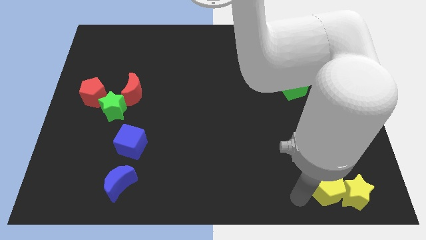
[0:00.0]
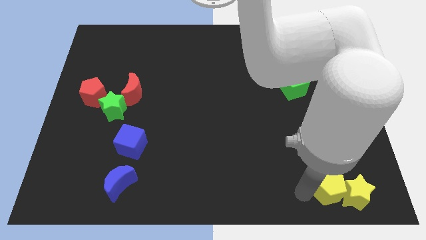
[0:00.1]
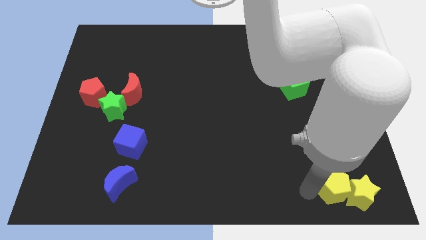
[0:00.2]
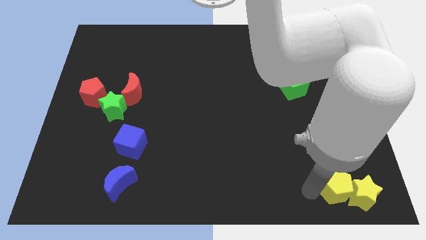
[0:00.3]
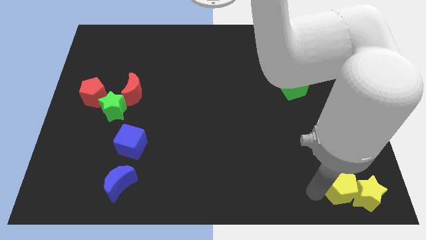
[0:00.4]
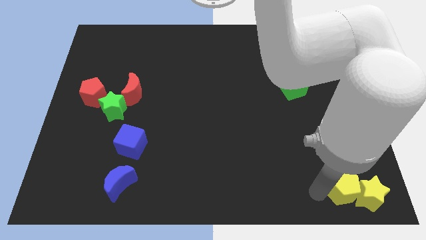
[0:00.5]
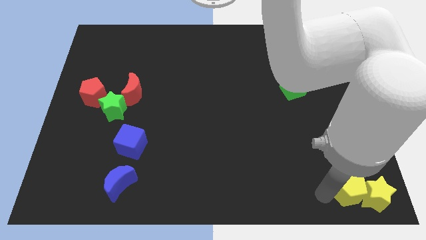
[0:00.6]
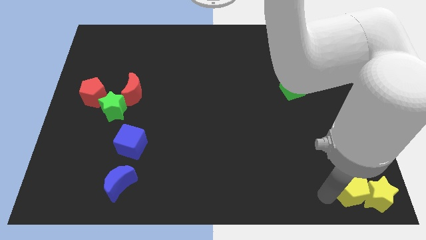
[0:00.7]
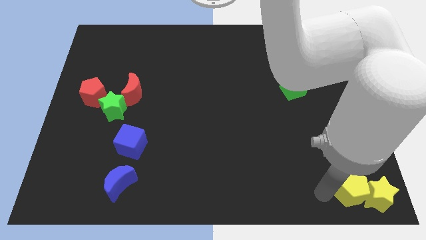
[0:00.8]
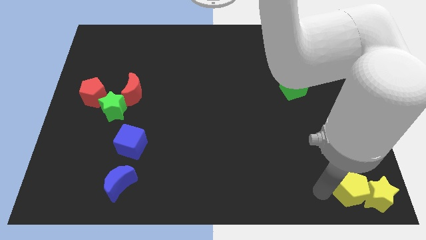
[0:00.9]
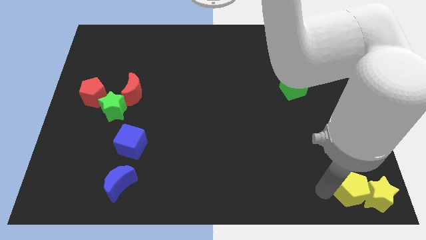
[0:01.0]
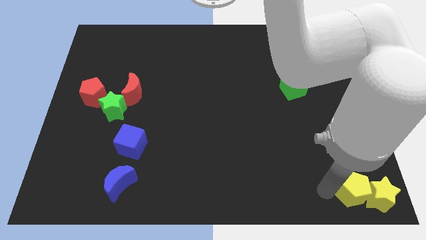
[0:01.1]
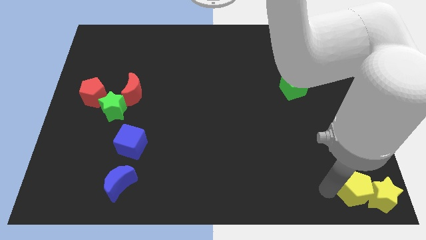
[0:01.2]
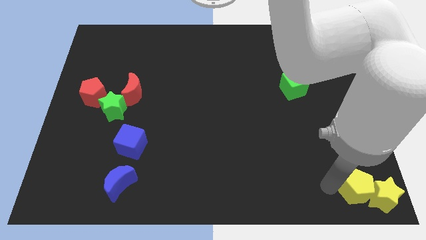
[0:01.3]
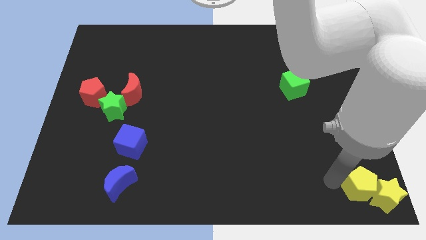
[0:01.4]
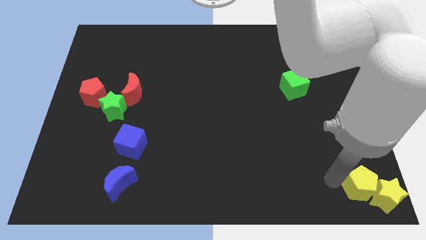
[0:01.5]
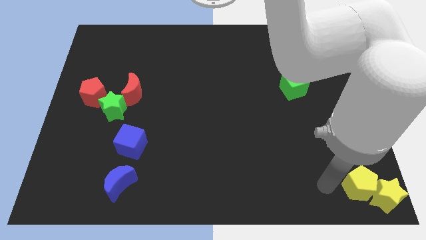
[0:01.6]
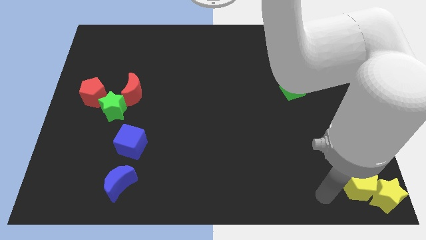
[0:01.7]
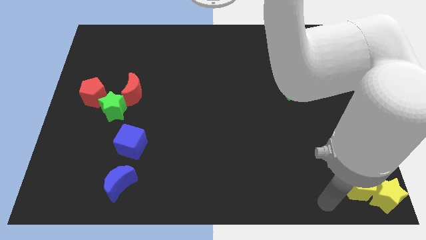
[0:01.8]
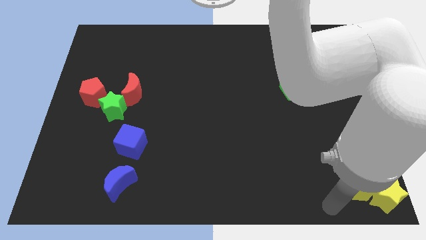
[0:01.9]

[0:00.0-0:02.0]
place the yellow star and yellow pentagon at the bottom right

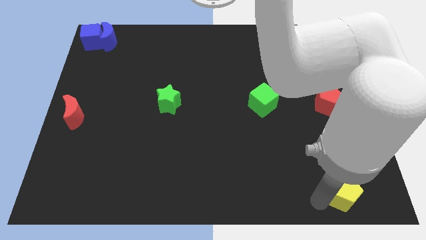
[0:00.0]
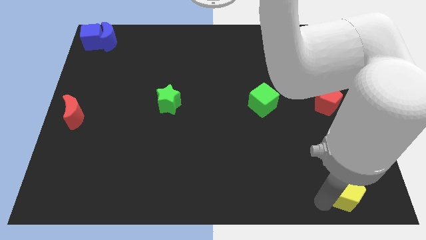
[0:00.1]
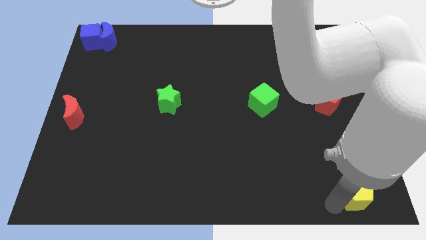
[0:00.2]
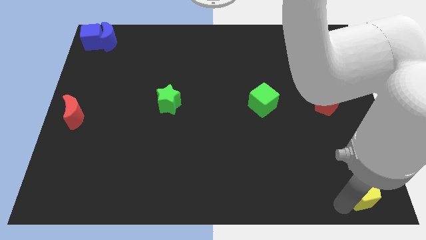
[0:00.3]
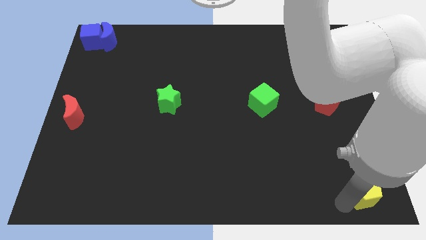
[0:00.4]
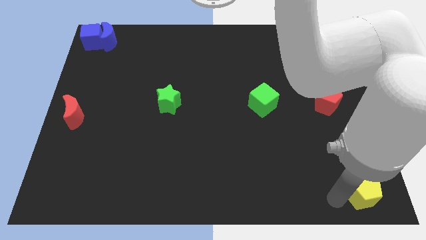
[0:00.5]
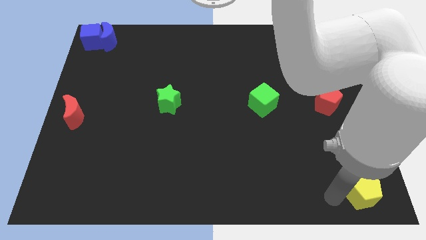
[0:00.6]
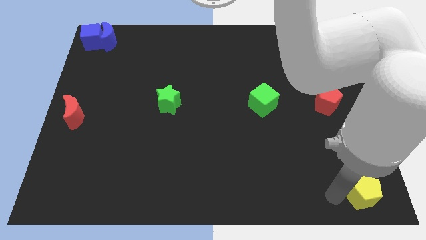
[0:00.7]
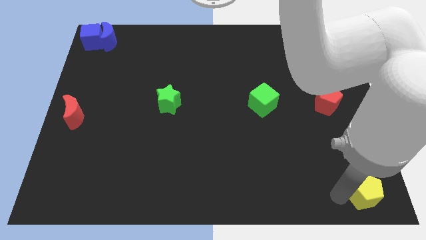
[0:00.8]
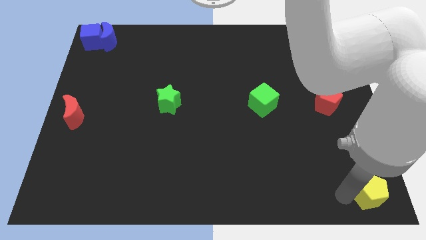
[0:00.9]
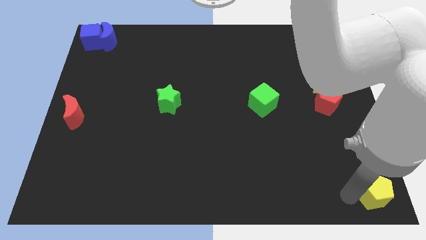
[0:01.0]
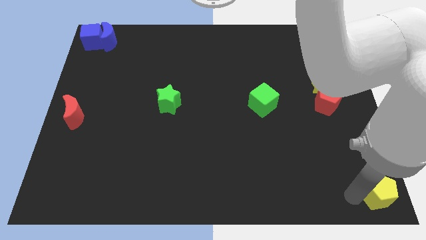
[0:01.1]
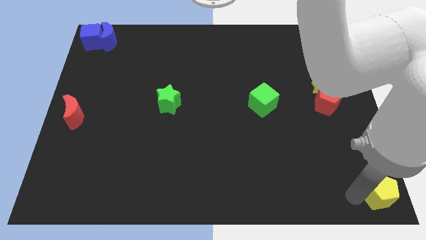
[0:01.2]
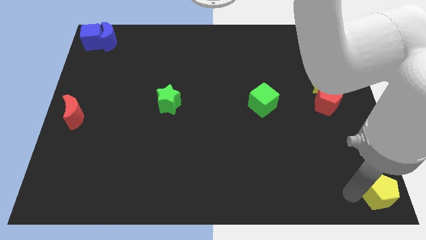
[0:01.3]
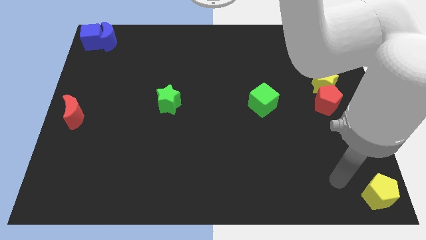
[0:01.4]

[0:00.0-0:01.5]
put the yellow pentagon at the bottom right corner

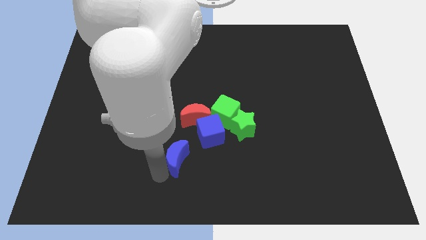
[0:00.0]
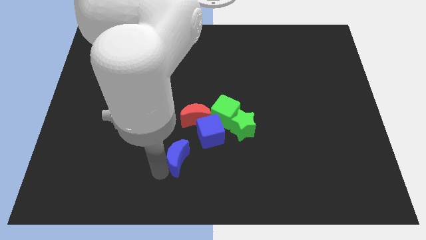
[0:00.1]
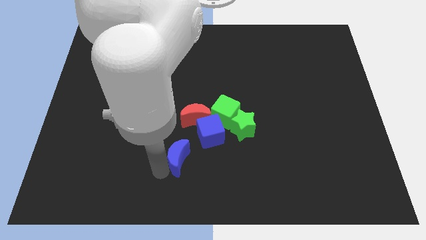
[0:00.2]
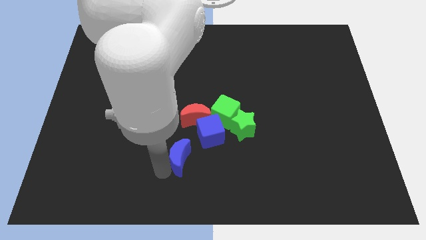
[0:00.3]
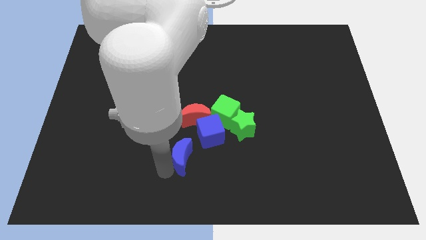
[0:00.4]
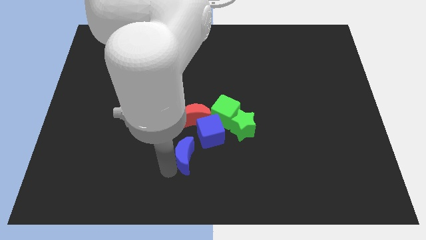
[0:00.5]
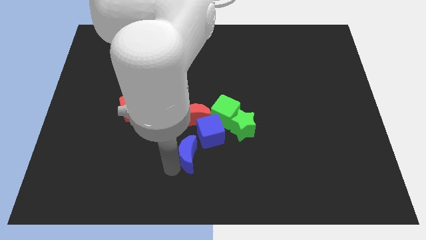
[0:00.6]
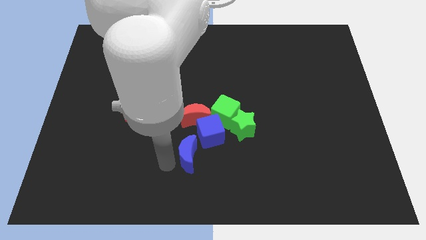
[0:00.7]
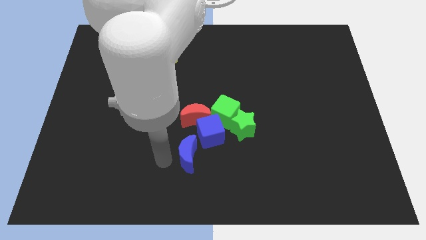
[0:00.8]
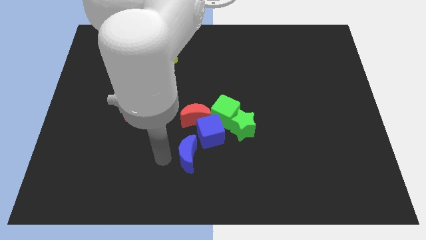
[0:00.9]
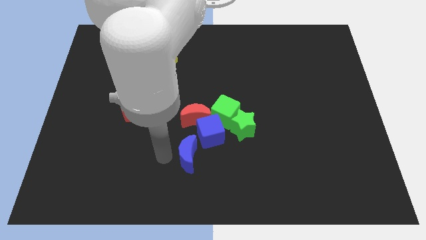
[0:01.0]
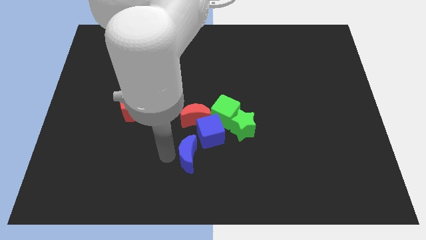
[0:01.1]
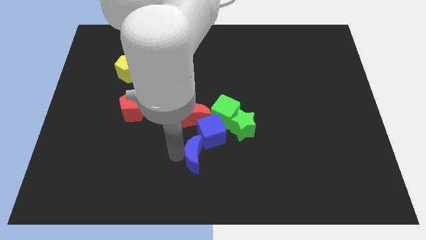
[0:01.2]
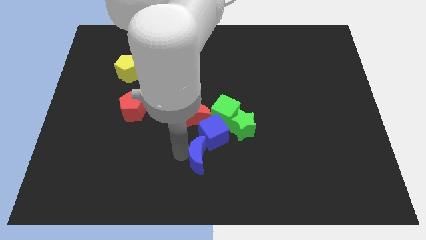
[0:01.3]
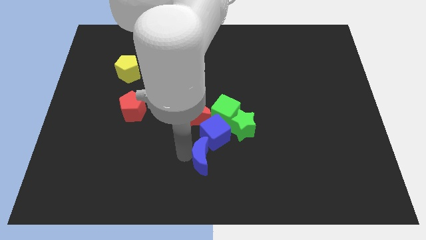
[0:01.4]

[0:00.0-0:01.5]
place the blue moon to the left side of blue cube

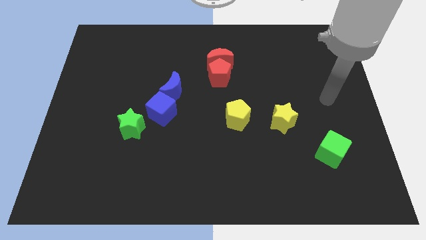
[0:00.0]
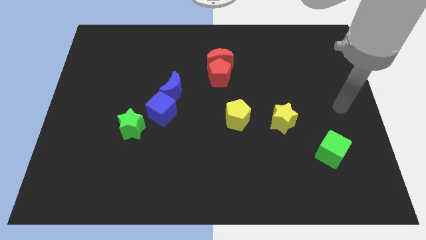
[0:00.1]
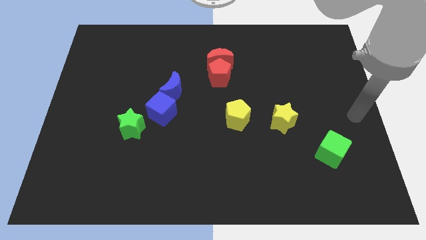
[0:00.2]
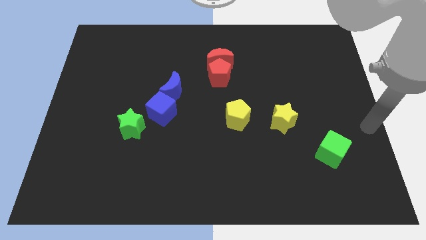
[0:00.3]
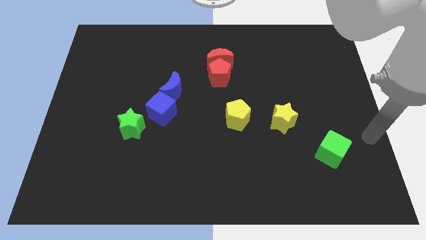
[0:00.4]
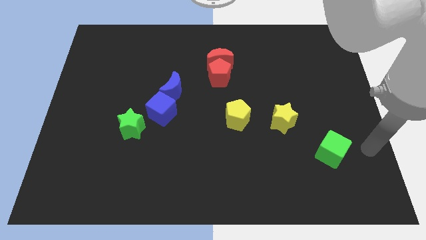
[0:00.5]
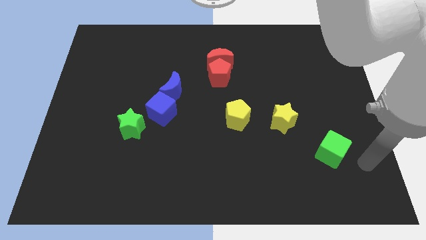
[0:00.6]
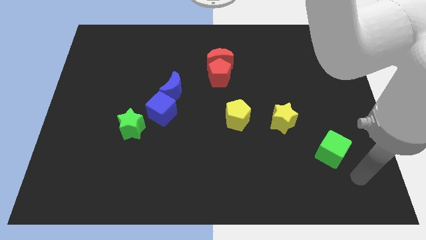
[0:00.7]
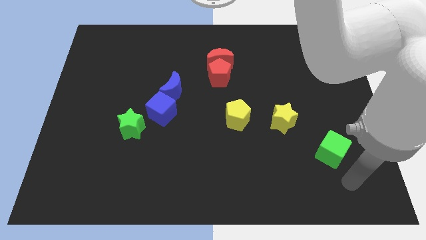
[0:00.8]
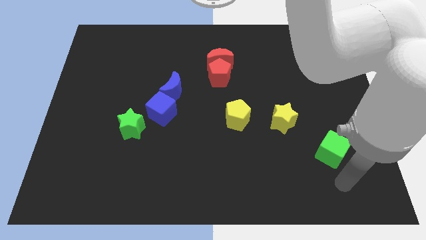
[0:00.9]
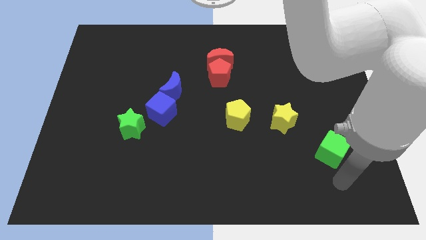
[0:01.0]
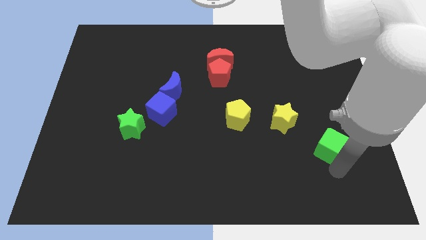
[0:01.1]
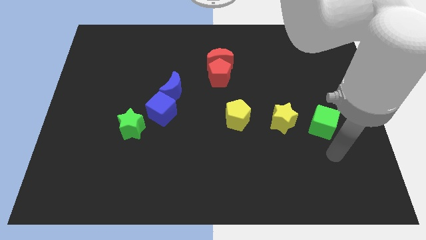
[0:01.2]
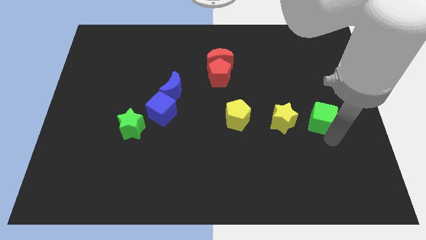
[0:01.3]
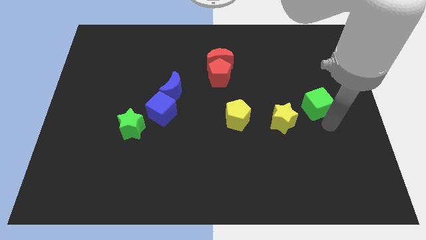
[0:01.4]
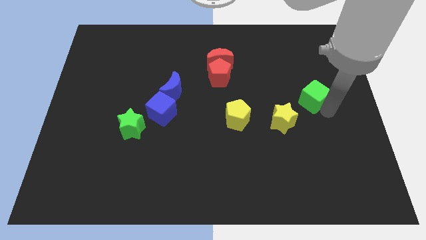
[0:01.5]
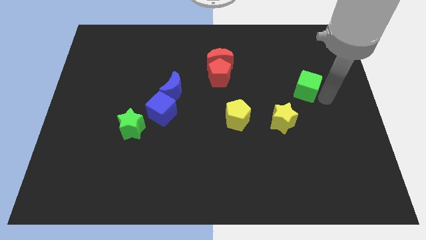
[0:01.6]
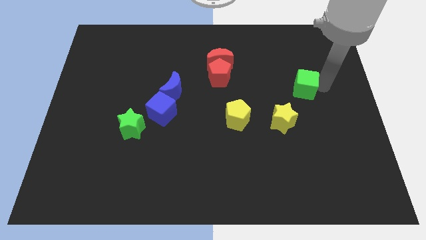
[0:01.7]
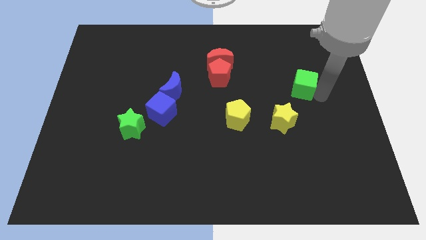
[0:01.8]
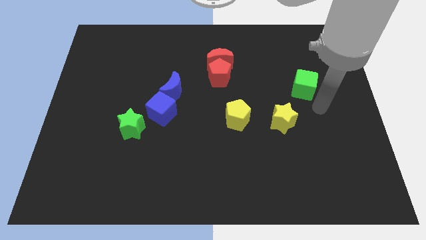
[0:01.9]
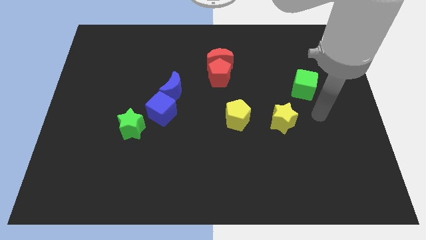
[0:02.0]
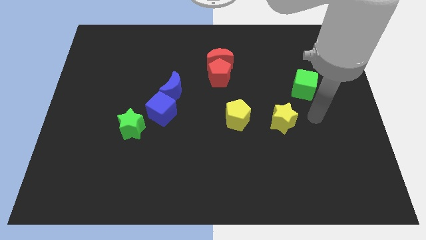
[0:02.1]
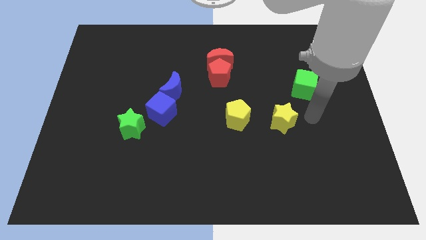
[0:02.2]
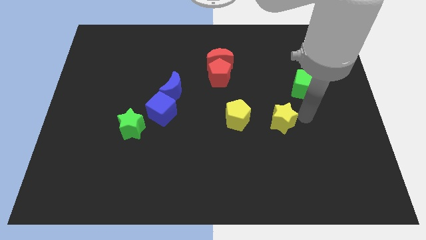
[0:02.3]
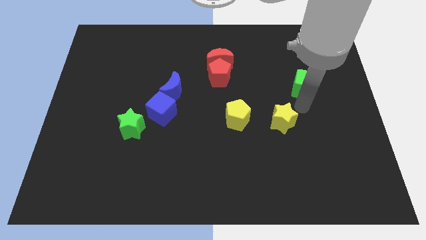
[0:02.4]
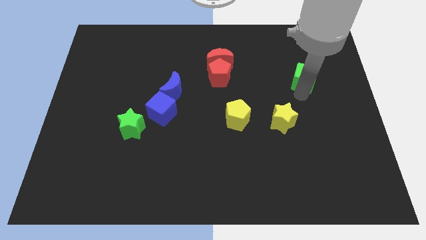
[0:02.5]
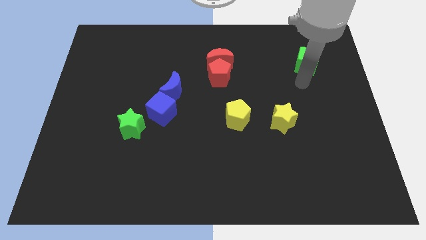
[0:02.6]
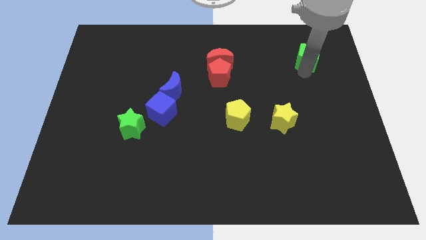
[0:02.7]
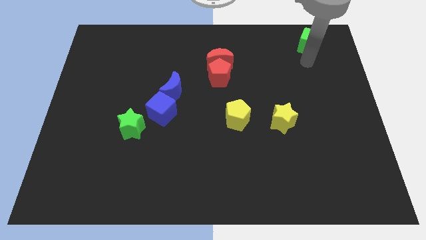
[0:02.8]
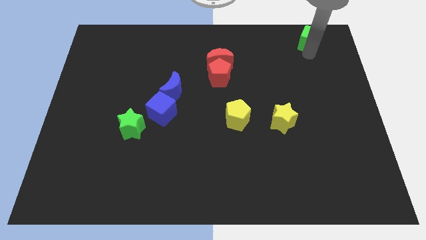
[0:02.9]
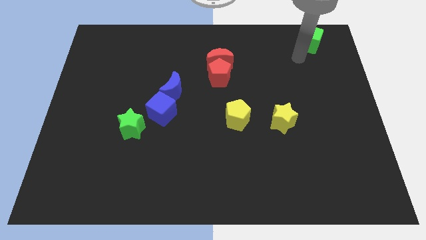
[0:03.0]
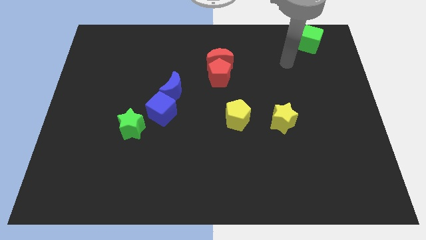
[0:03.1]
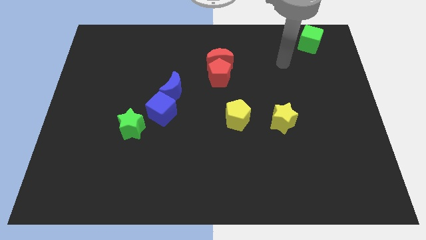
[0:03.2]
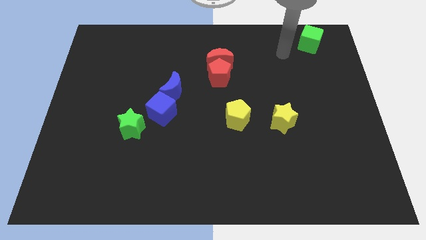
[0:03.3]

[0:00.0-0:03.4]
slide the green cube diagonally top right to the yellow star

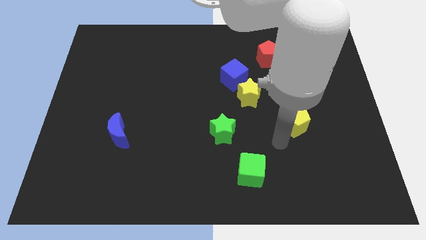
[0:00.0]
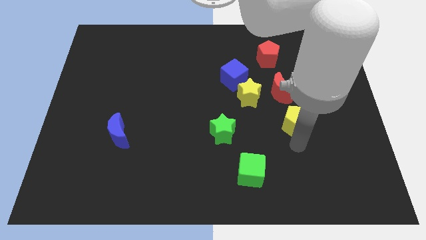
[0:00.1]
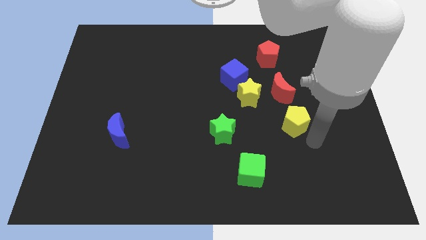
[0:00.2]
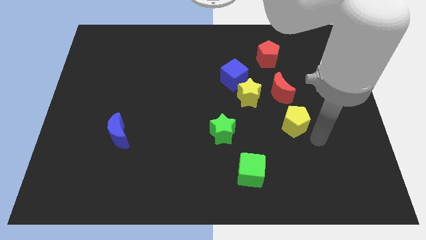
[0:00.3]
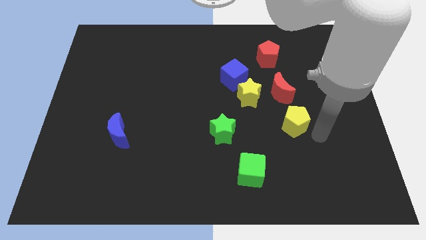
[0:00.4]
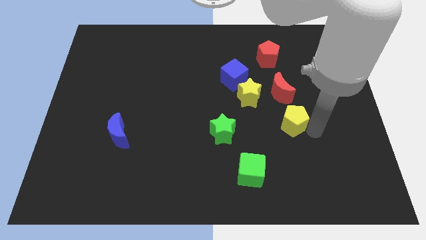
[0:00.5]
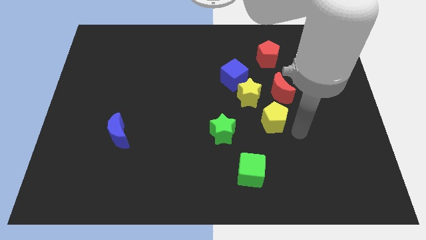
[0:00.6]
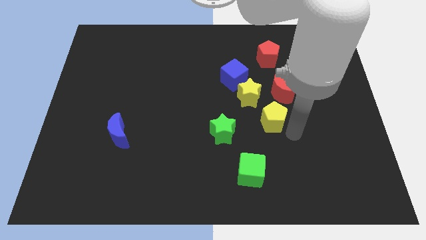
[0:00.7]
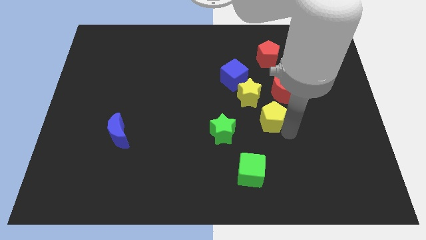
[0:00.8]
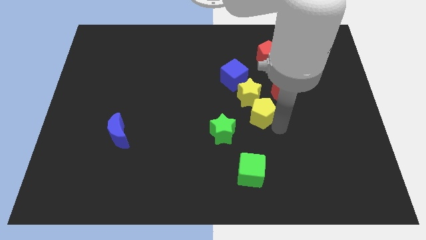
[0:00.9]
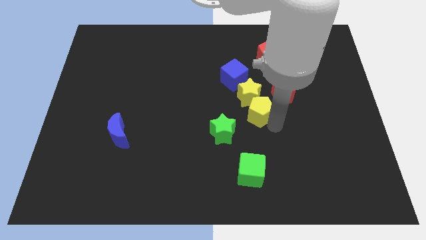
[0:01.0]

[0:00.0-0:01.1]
slide yellow pentagon into yellow star
